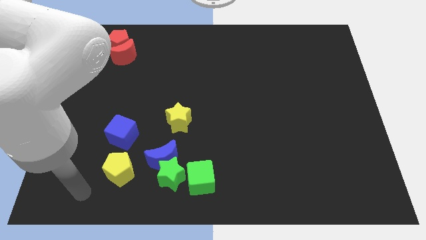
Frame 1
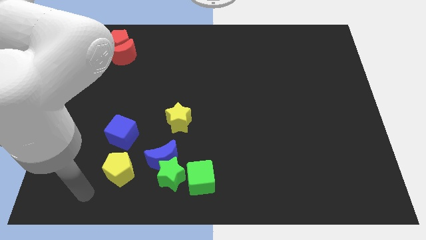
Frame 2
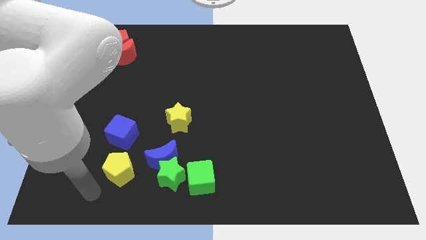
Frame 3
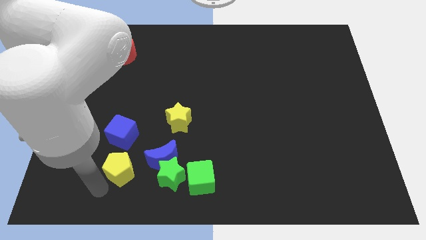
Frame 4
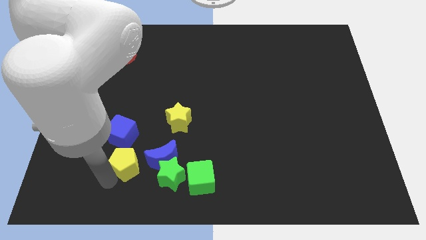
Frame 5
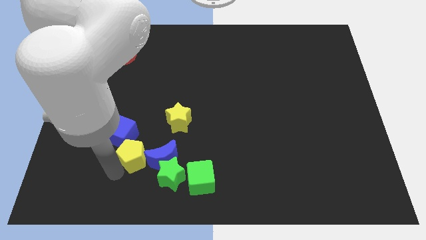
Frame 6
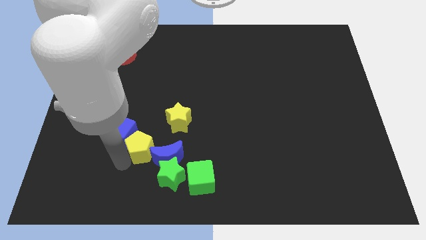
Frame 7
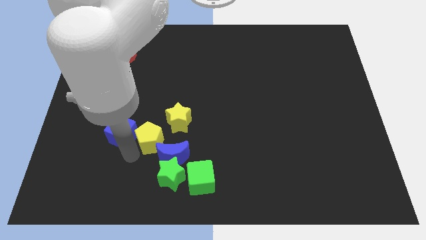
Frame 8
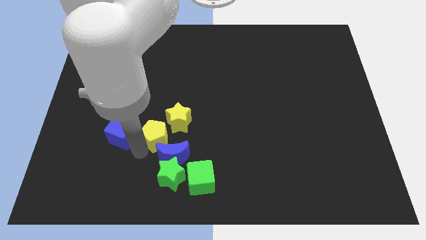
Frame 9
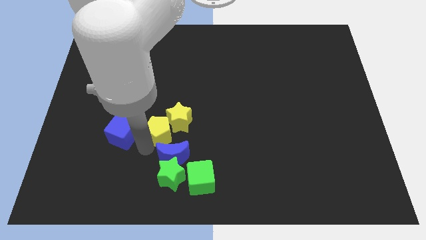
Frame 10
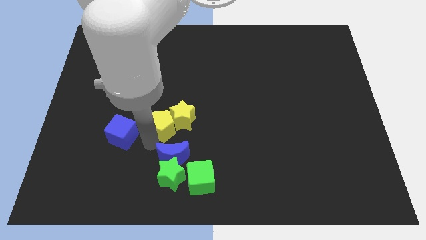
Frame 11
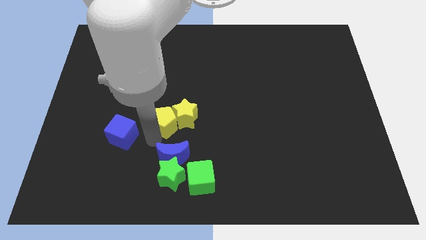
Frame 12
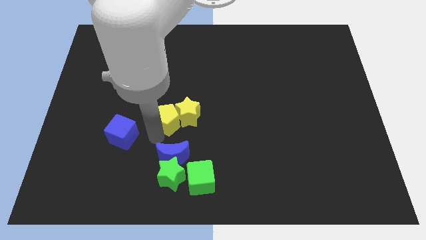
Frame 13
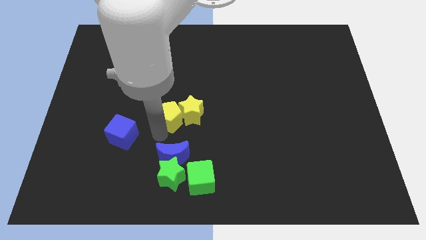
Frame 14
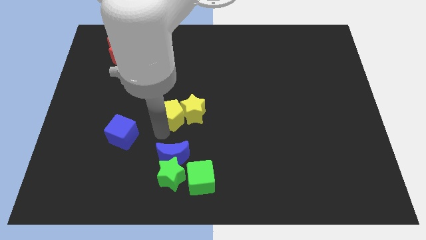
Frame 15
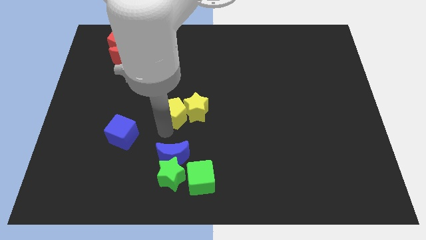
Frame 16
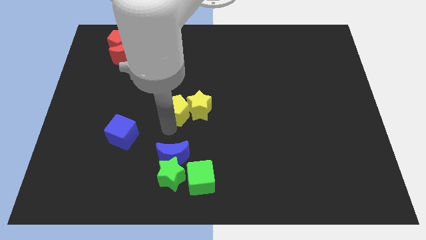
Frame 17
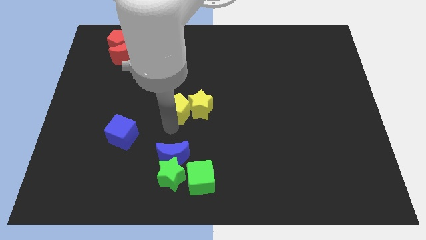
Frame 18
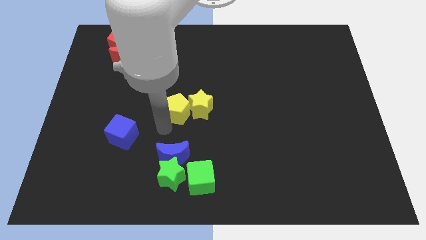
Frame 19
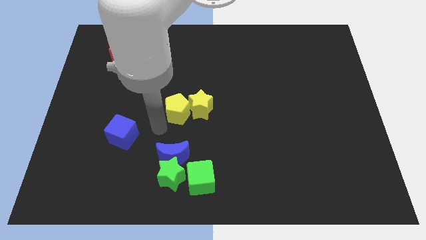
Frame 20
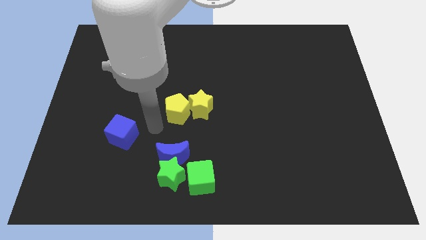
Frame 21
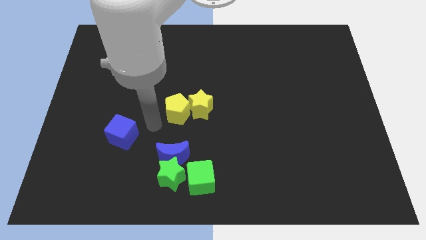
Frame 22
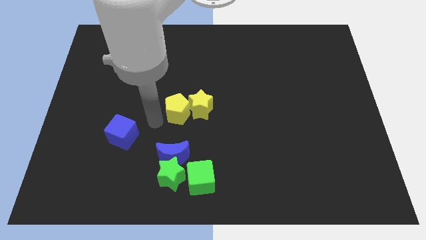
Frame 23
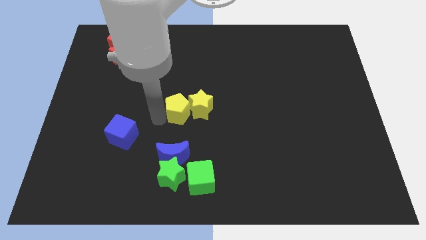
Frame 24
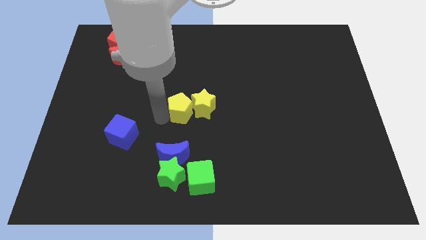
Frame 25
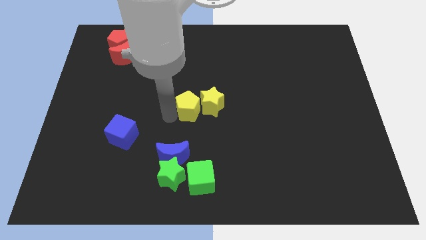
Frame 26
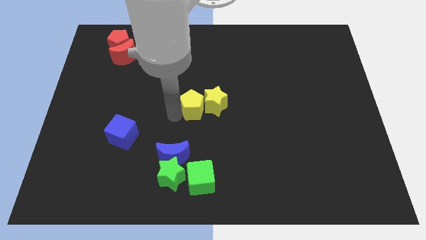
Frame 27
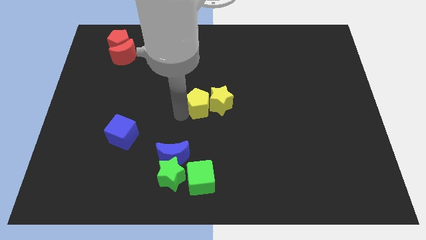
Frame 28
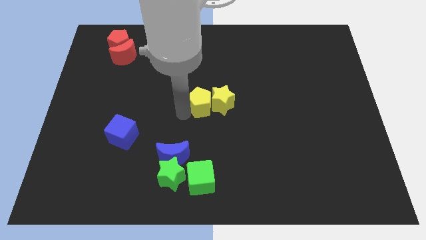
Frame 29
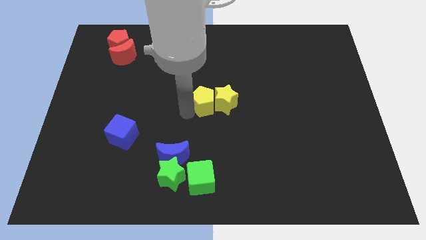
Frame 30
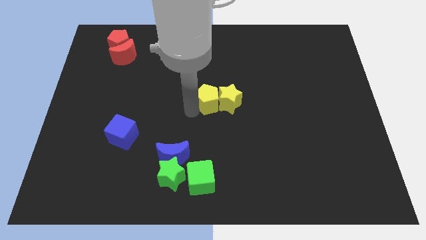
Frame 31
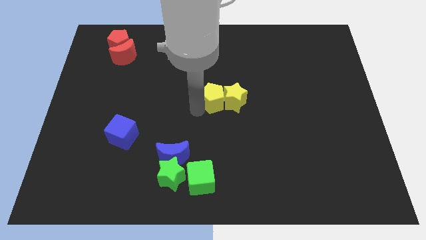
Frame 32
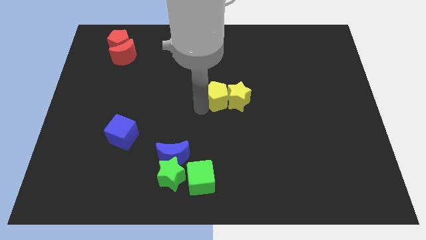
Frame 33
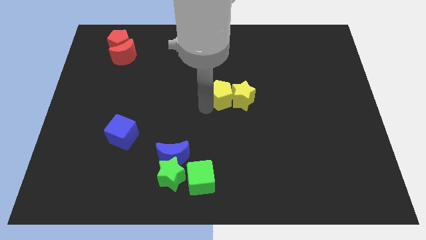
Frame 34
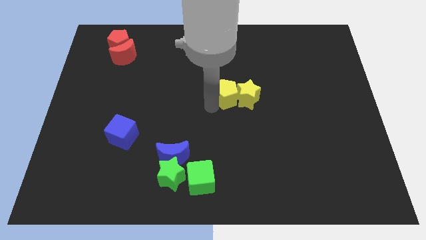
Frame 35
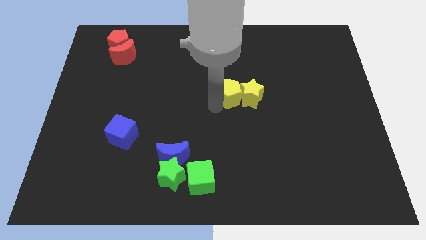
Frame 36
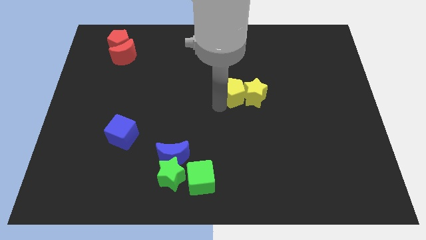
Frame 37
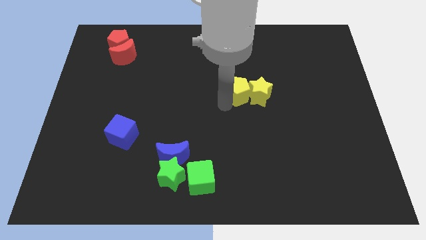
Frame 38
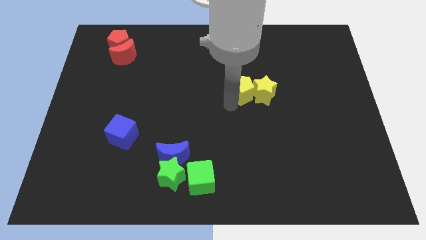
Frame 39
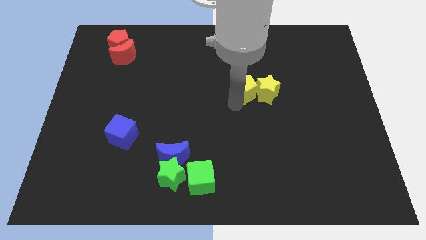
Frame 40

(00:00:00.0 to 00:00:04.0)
push the yellow star with the yellow pentagon

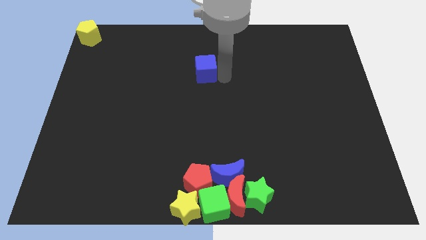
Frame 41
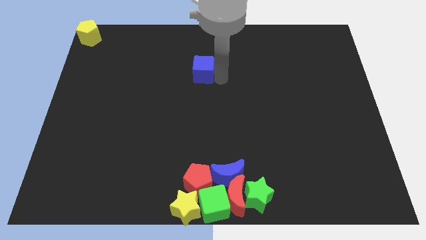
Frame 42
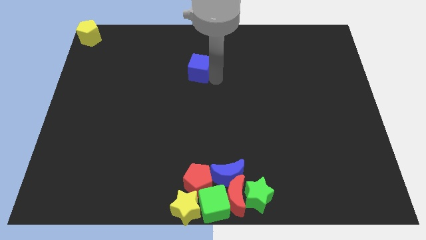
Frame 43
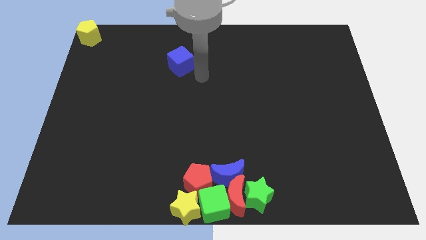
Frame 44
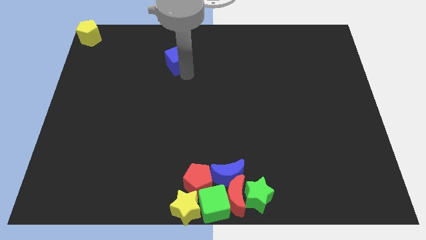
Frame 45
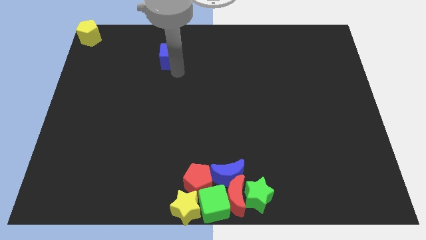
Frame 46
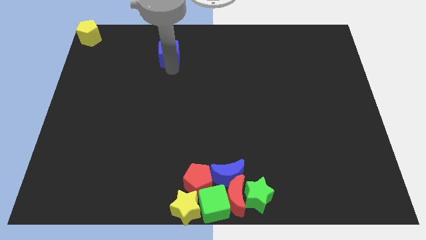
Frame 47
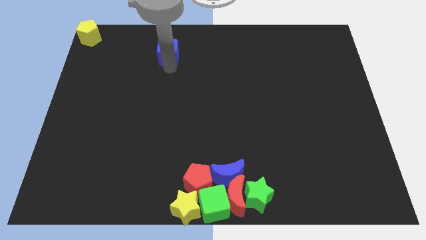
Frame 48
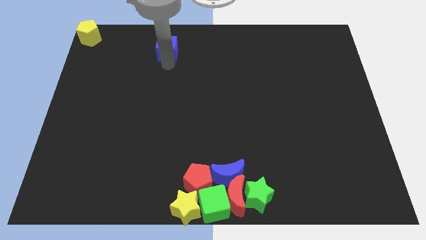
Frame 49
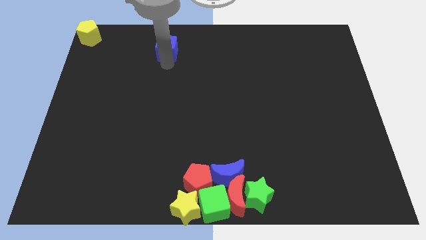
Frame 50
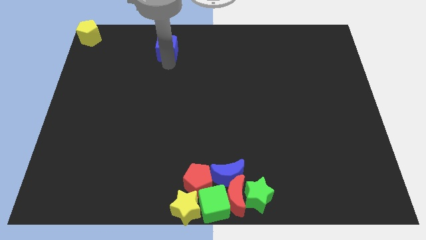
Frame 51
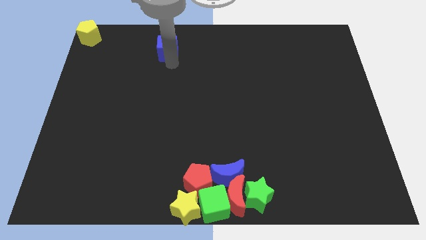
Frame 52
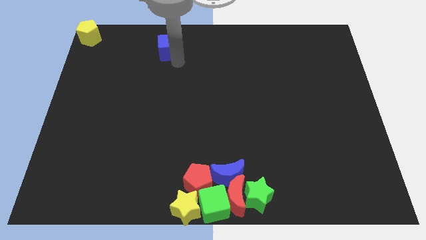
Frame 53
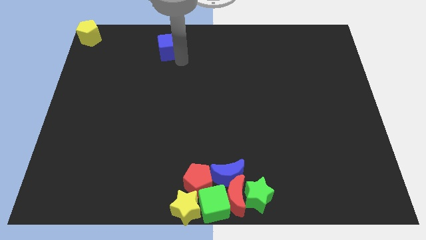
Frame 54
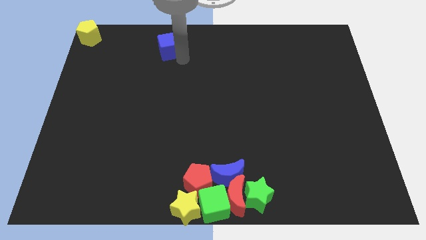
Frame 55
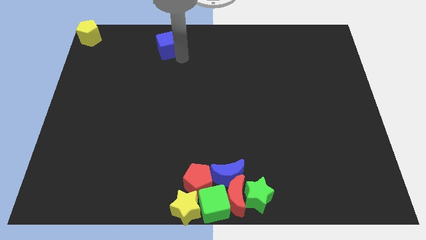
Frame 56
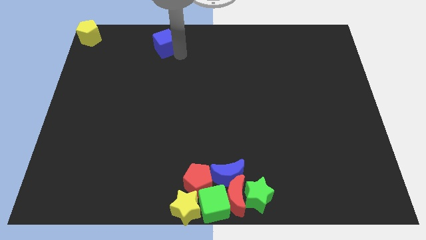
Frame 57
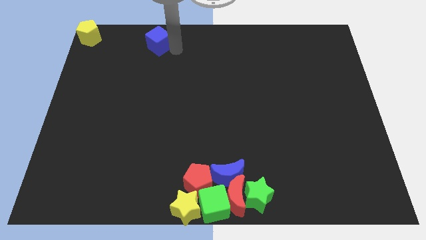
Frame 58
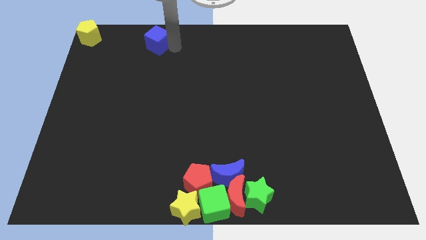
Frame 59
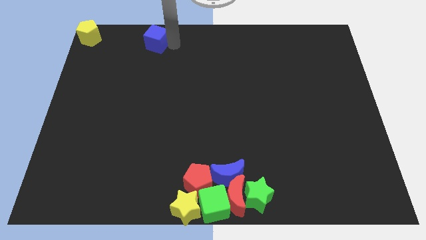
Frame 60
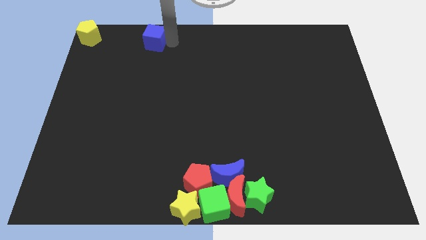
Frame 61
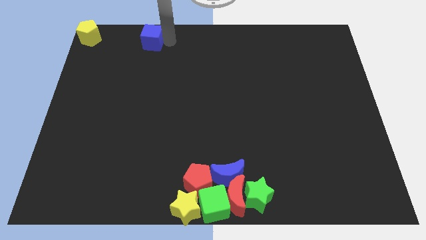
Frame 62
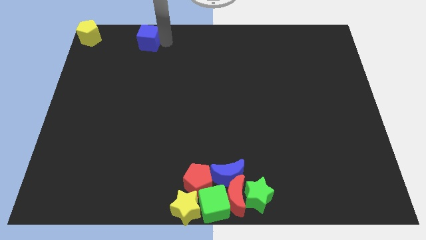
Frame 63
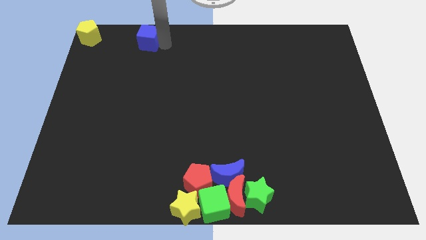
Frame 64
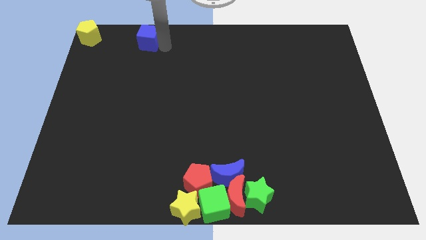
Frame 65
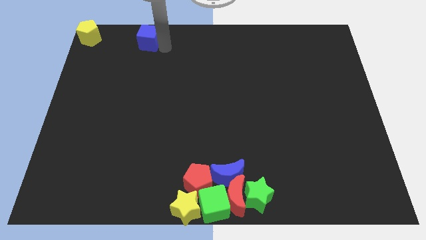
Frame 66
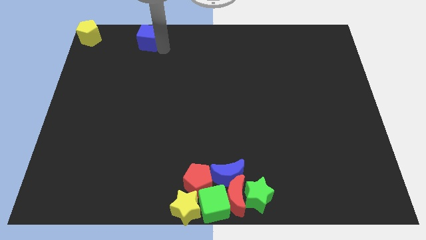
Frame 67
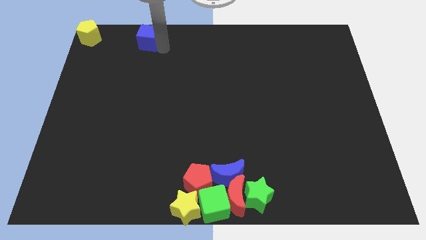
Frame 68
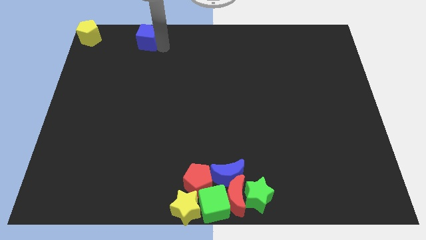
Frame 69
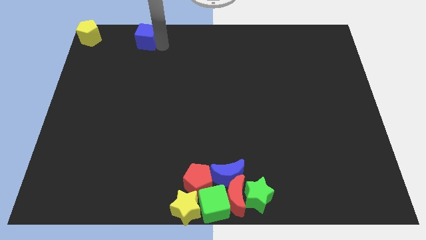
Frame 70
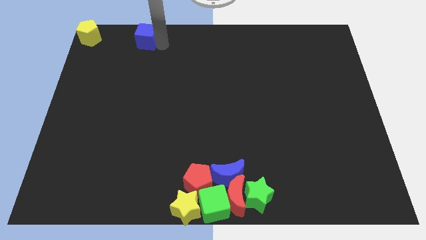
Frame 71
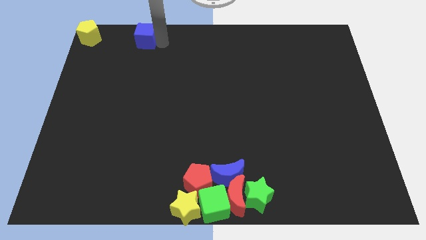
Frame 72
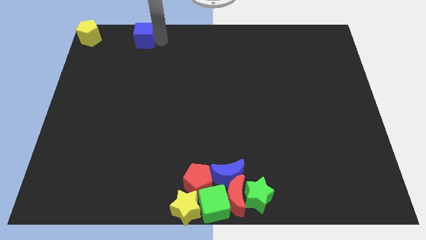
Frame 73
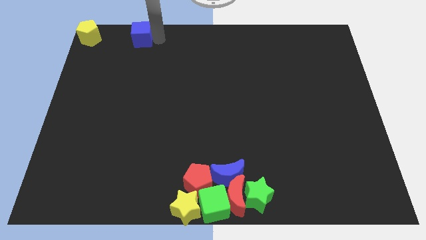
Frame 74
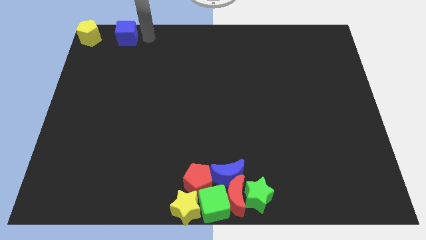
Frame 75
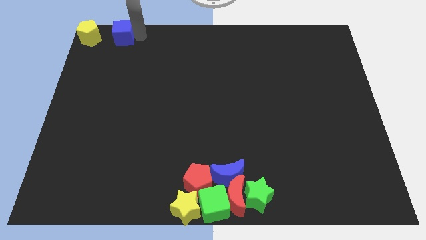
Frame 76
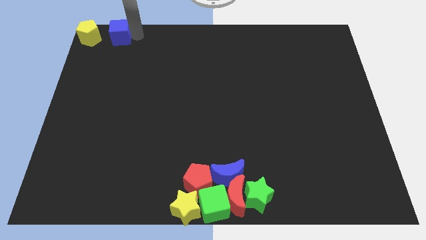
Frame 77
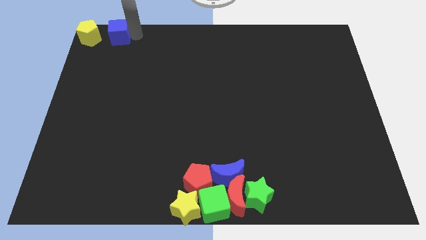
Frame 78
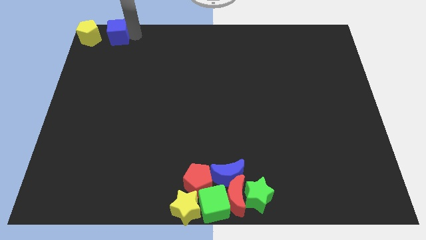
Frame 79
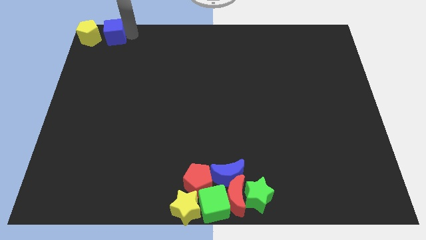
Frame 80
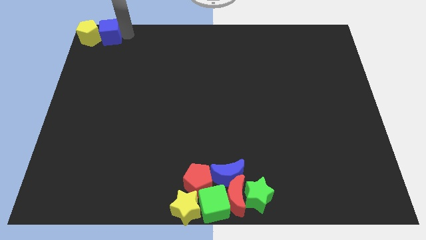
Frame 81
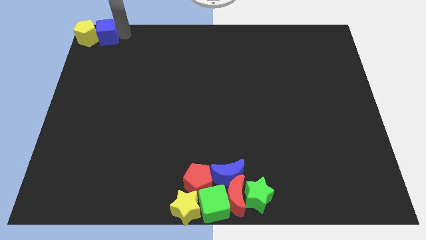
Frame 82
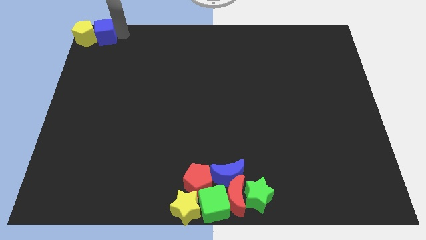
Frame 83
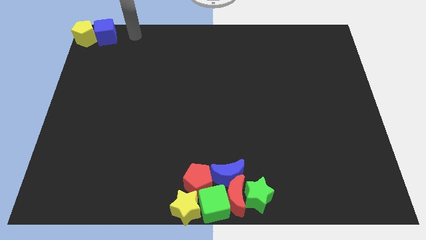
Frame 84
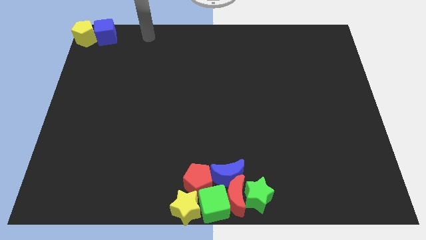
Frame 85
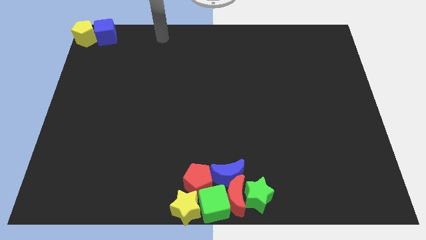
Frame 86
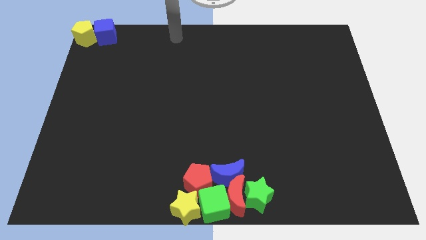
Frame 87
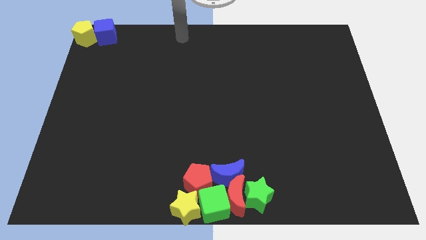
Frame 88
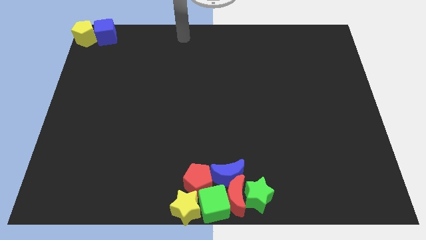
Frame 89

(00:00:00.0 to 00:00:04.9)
put the blue cube parallel right to the yellow pentagon
